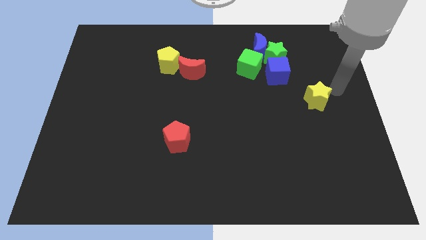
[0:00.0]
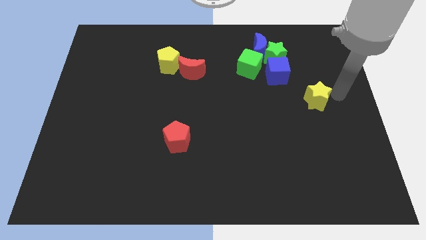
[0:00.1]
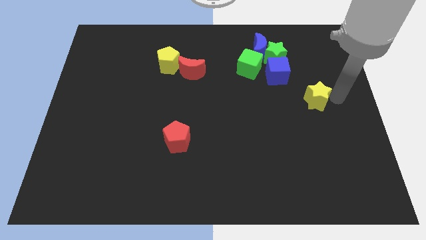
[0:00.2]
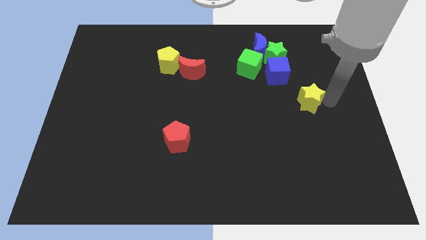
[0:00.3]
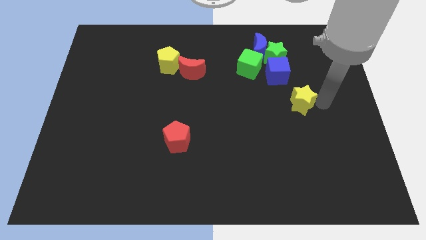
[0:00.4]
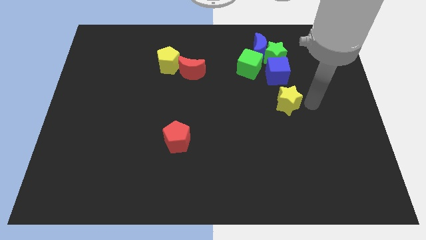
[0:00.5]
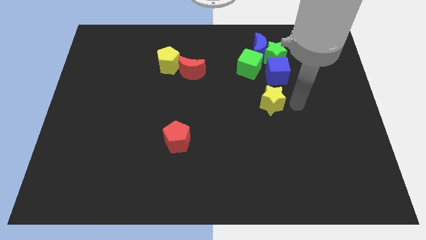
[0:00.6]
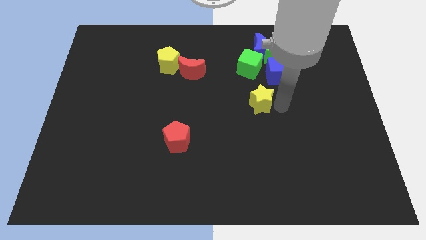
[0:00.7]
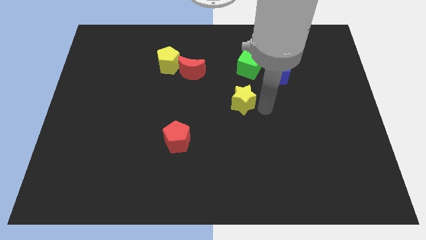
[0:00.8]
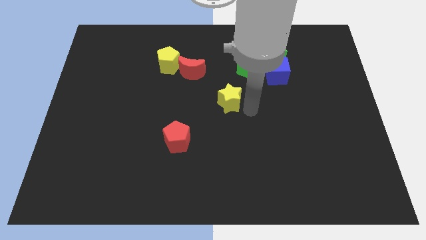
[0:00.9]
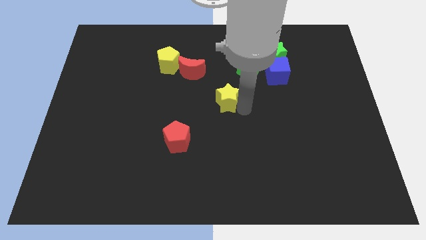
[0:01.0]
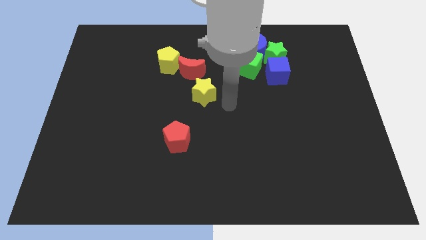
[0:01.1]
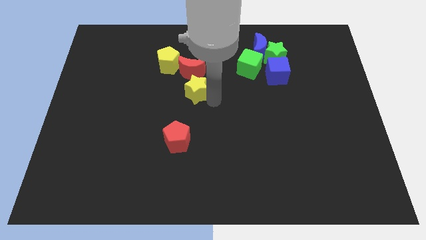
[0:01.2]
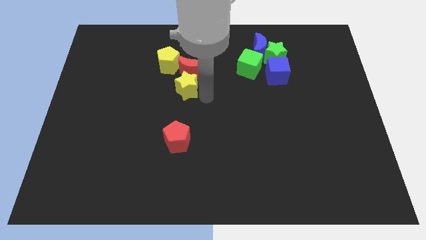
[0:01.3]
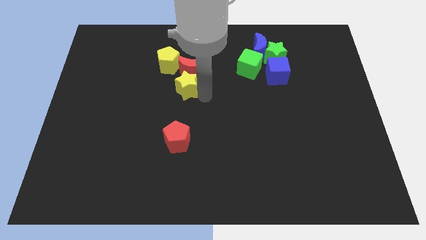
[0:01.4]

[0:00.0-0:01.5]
place the yellow star below the red crescent

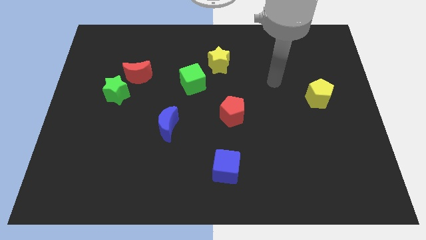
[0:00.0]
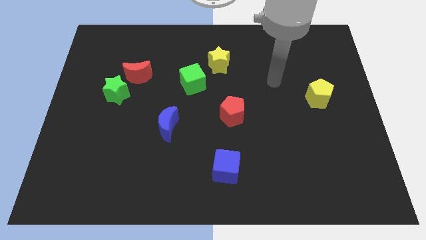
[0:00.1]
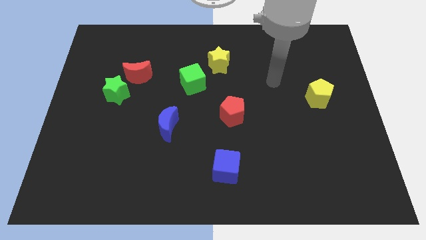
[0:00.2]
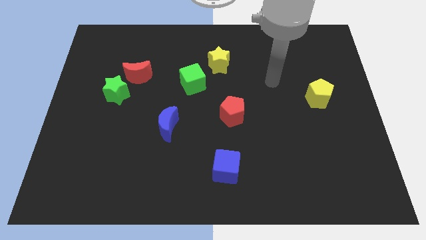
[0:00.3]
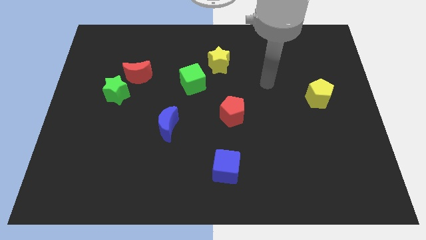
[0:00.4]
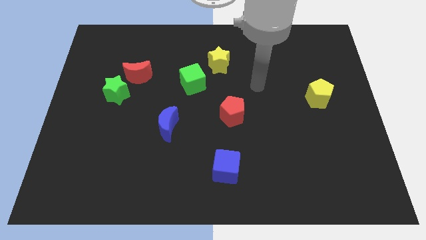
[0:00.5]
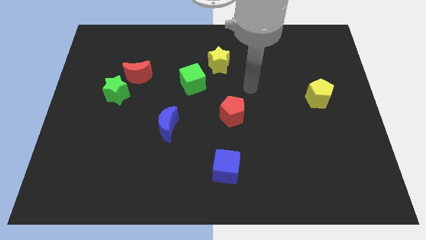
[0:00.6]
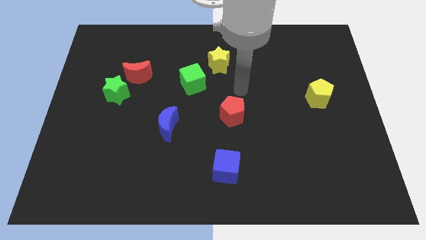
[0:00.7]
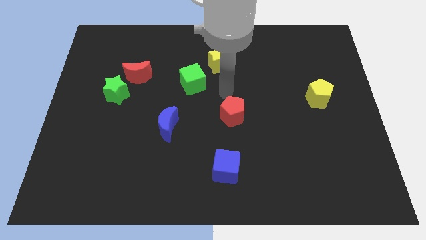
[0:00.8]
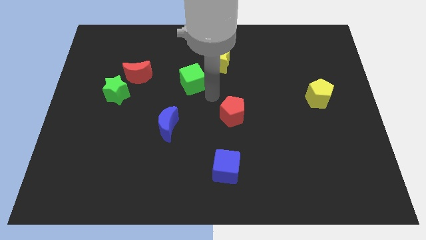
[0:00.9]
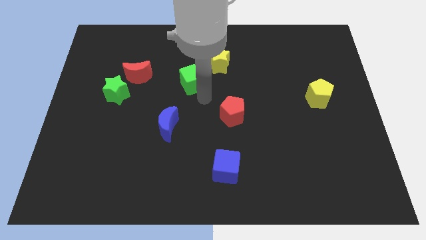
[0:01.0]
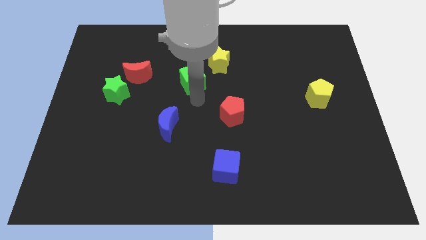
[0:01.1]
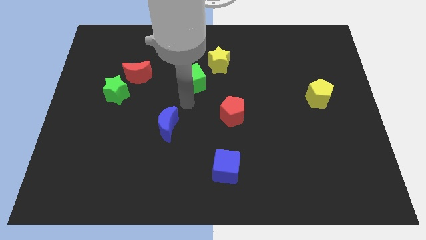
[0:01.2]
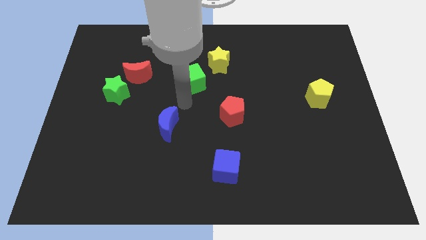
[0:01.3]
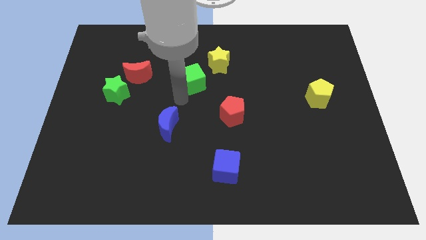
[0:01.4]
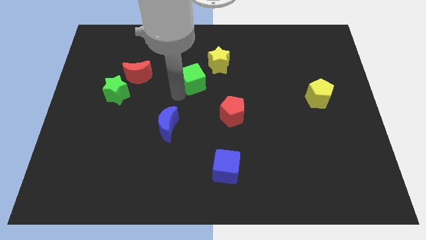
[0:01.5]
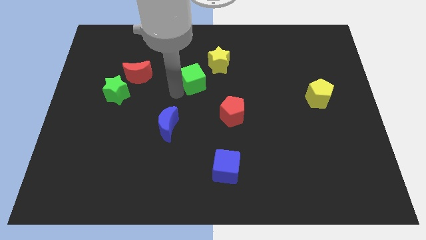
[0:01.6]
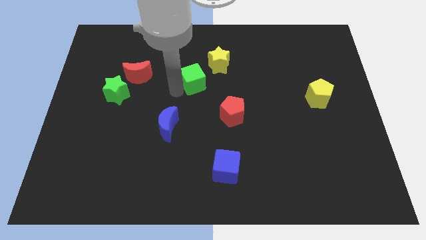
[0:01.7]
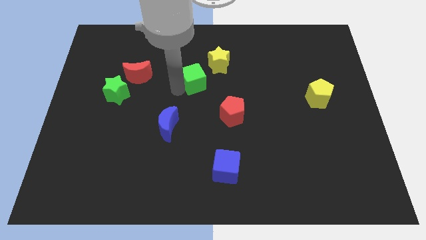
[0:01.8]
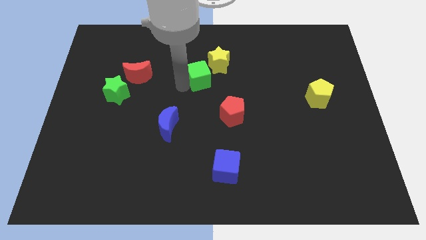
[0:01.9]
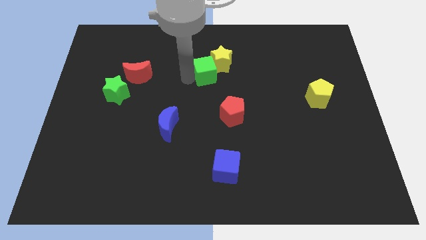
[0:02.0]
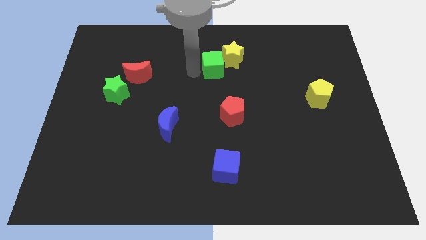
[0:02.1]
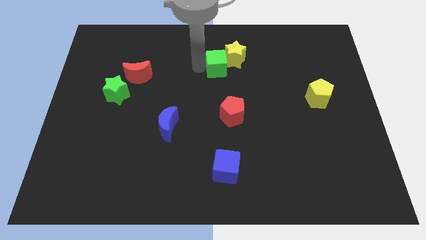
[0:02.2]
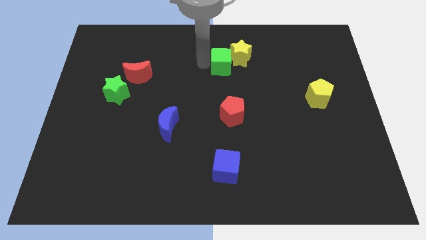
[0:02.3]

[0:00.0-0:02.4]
push the green cube into the yellow star

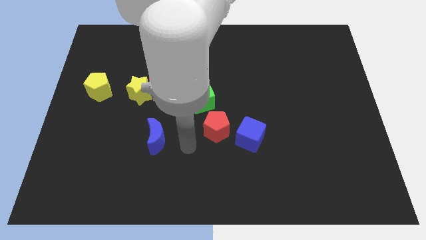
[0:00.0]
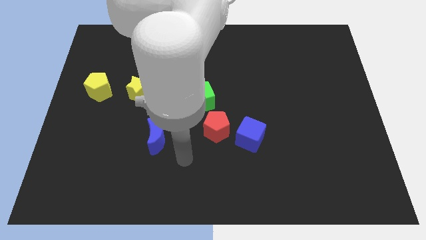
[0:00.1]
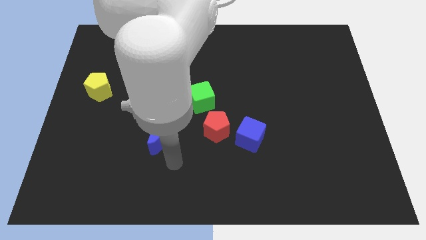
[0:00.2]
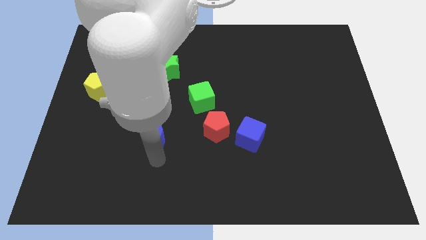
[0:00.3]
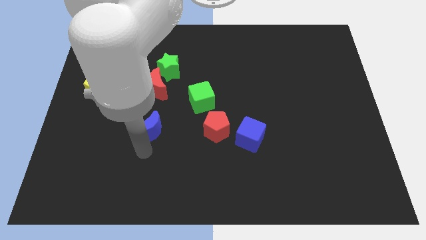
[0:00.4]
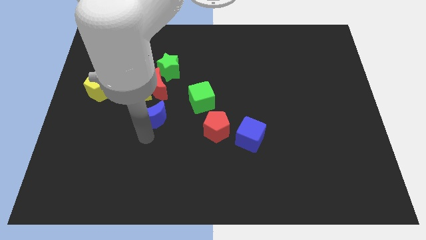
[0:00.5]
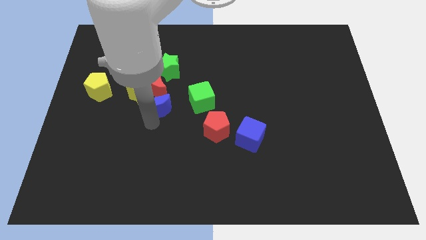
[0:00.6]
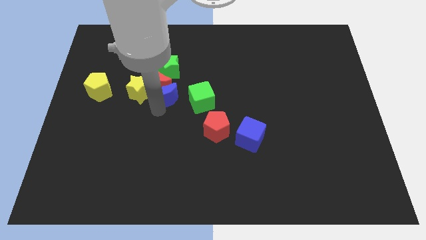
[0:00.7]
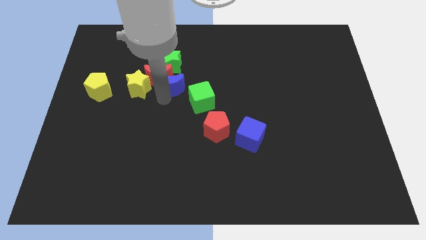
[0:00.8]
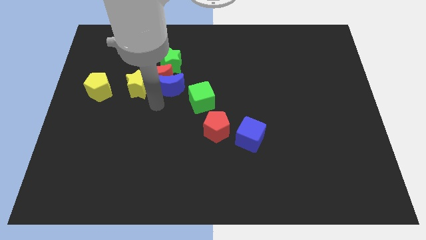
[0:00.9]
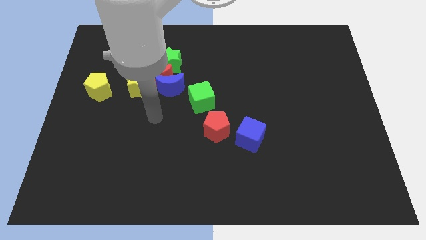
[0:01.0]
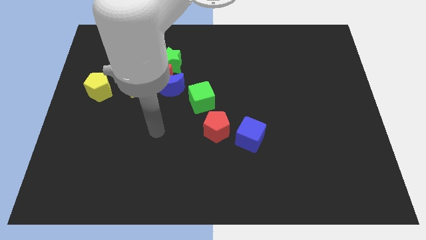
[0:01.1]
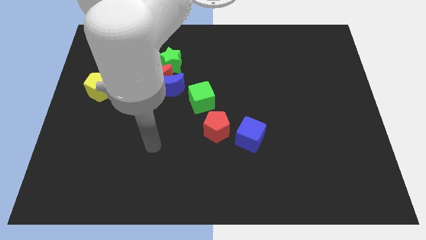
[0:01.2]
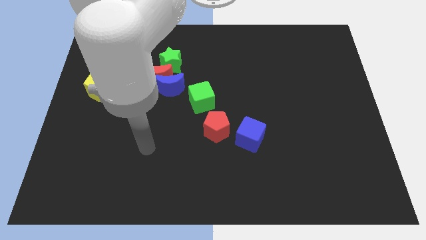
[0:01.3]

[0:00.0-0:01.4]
move blue moon towards red moon

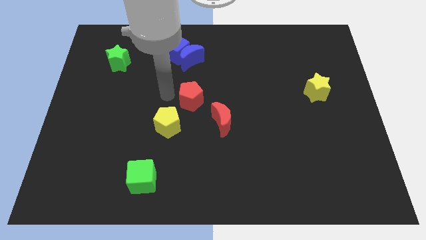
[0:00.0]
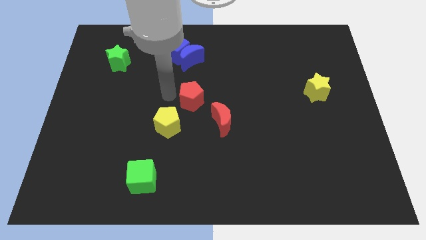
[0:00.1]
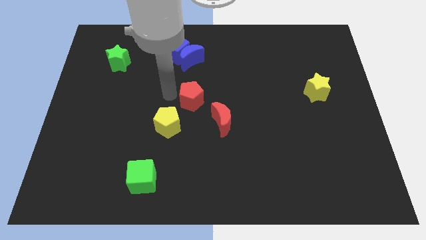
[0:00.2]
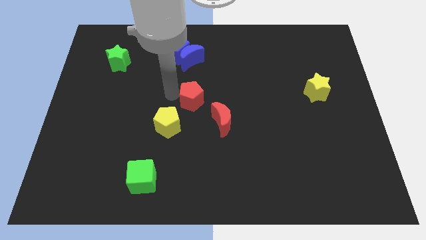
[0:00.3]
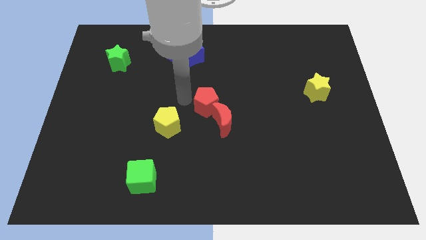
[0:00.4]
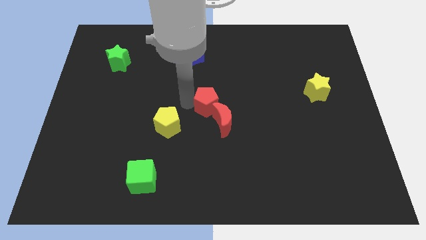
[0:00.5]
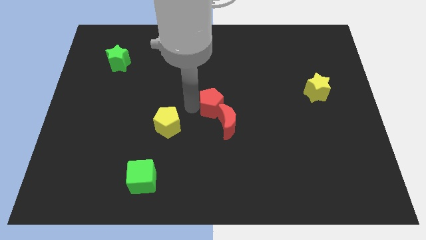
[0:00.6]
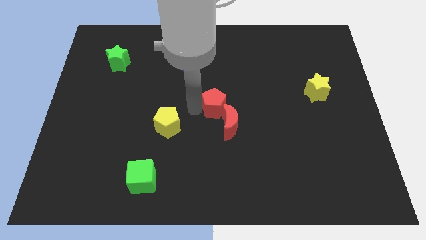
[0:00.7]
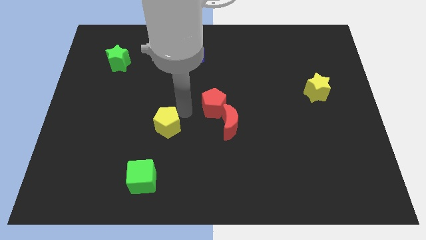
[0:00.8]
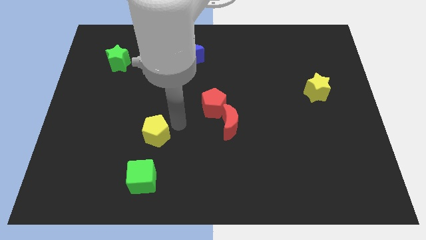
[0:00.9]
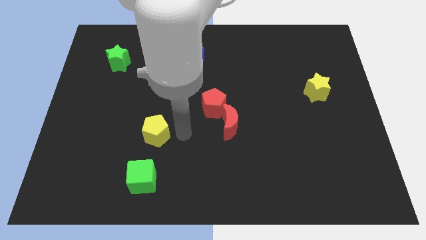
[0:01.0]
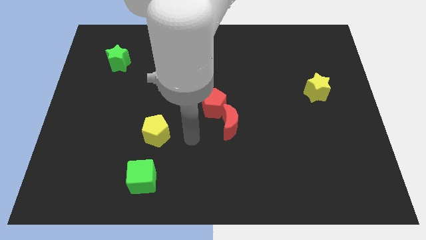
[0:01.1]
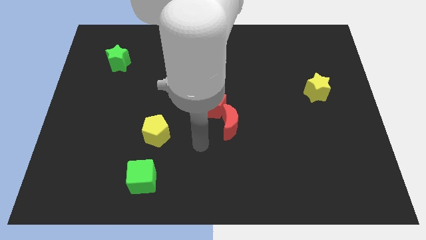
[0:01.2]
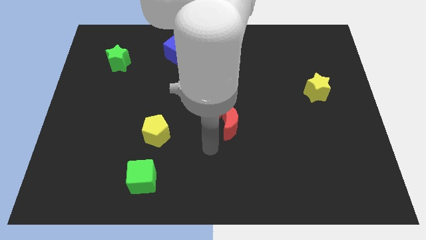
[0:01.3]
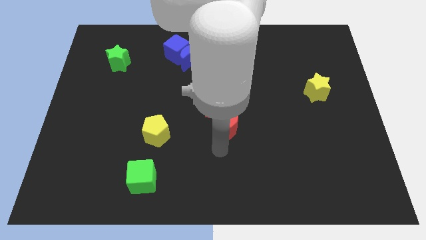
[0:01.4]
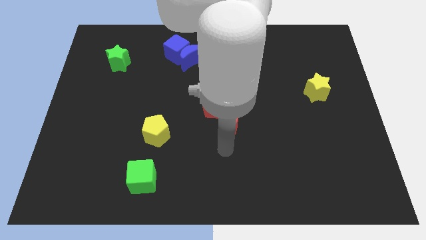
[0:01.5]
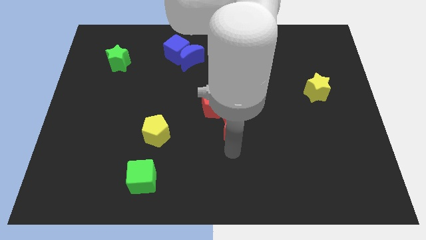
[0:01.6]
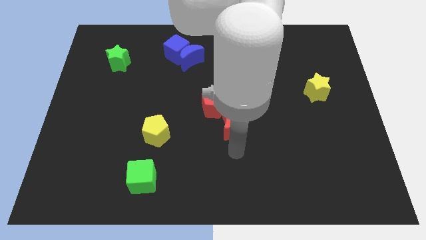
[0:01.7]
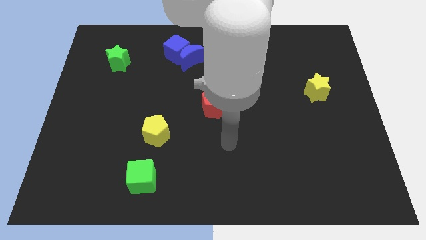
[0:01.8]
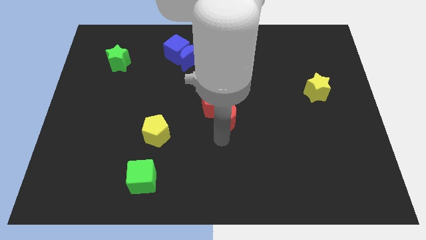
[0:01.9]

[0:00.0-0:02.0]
push the red pentagon into red crescent

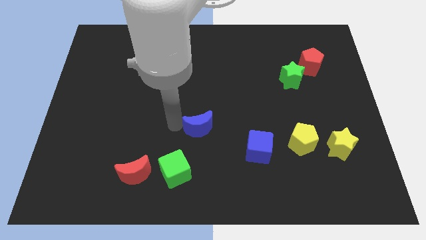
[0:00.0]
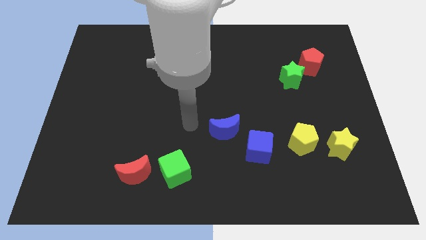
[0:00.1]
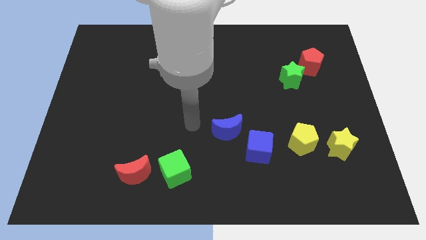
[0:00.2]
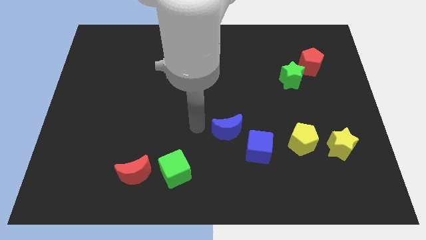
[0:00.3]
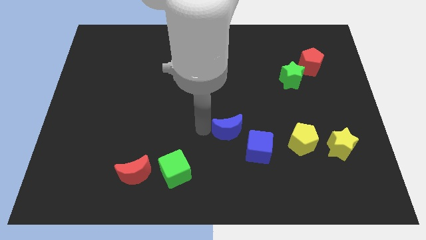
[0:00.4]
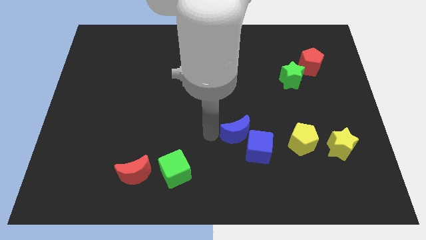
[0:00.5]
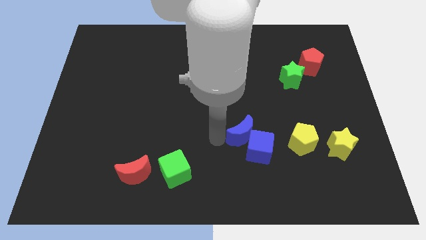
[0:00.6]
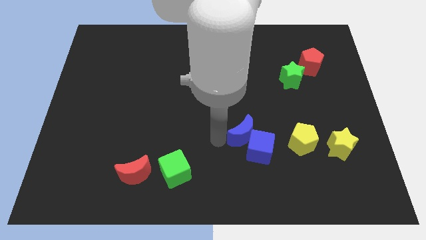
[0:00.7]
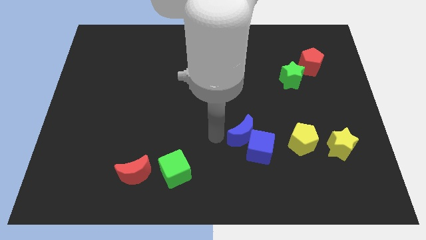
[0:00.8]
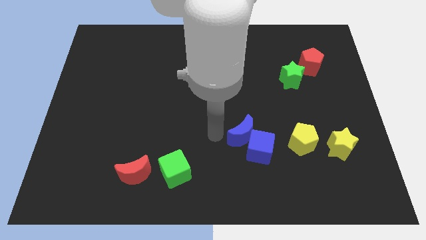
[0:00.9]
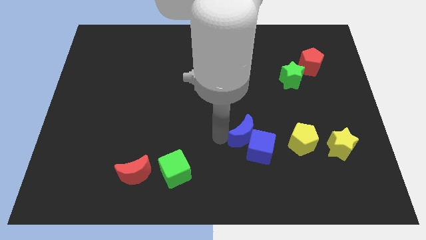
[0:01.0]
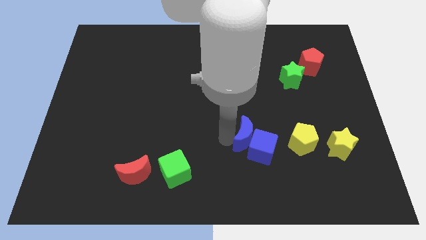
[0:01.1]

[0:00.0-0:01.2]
move the blue crescent into the blue cube

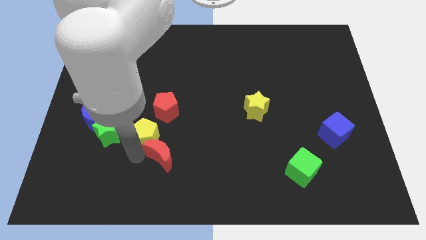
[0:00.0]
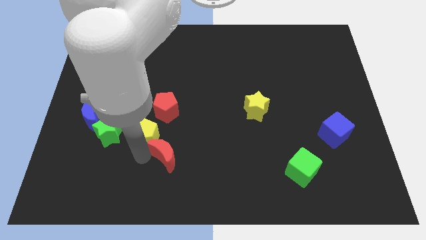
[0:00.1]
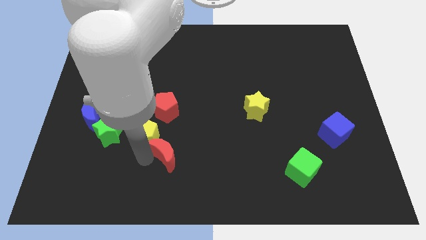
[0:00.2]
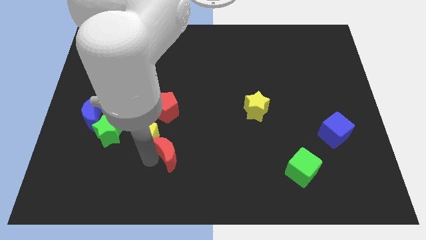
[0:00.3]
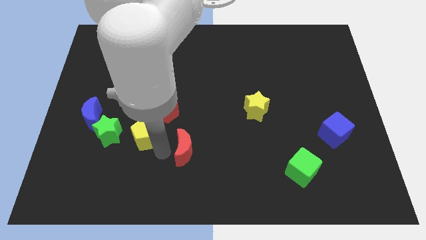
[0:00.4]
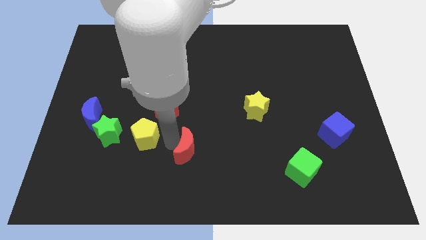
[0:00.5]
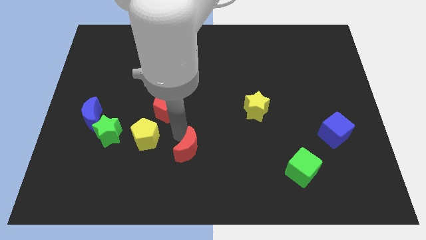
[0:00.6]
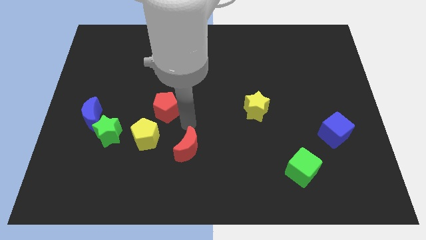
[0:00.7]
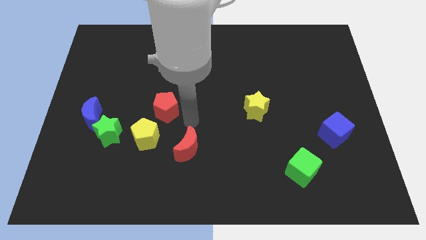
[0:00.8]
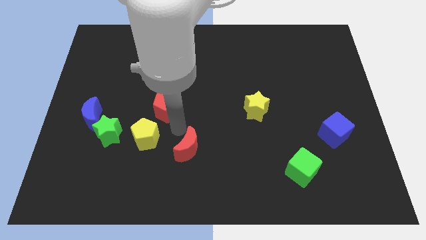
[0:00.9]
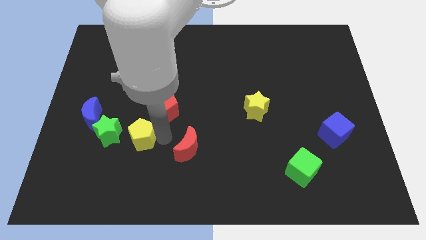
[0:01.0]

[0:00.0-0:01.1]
push the red crescent to the right of the yellow pentagon
